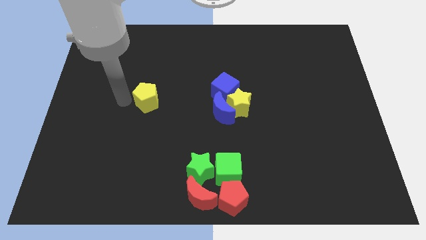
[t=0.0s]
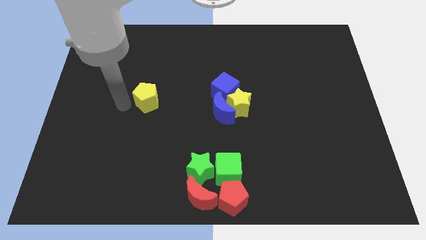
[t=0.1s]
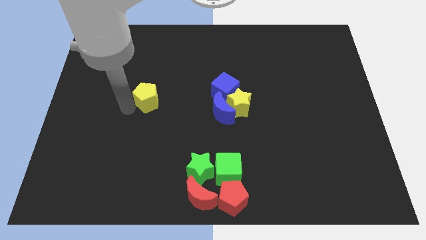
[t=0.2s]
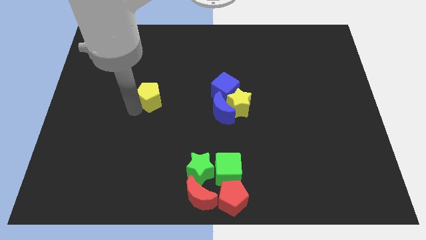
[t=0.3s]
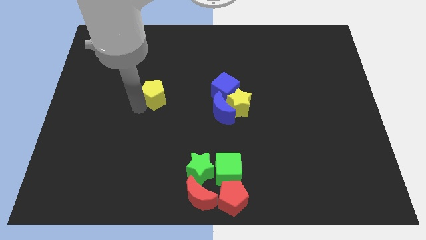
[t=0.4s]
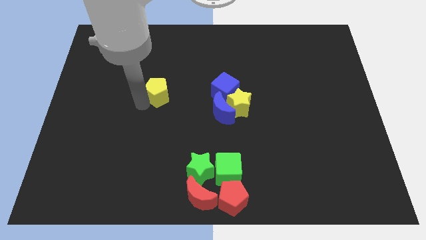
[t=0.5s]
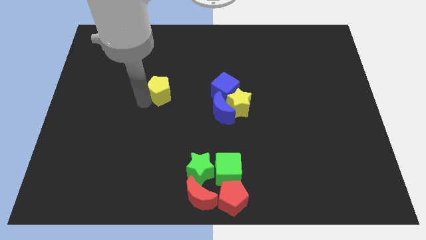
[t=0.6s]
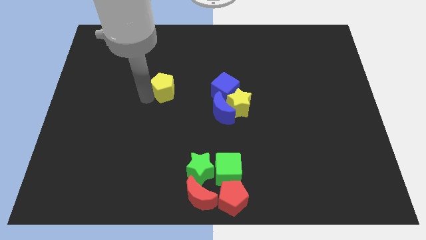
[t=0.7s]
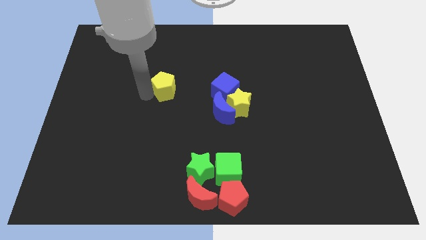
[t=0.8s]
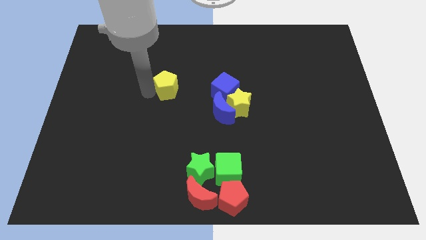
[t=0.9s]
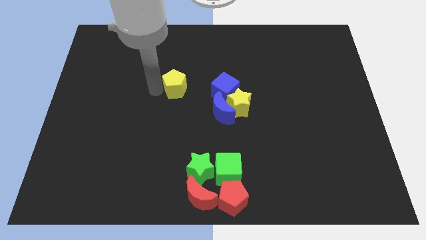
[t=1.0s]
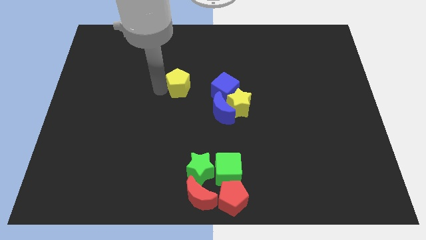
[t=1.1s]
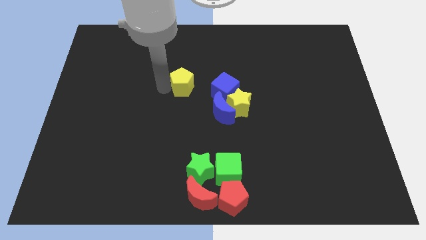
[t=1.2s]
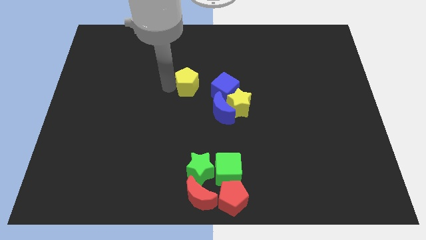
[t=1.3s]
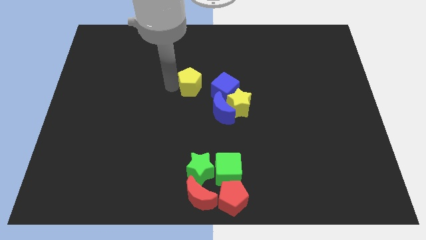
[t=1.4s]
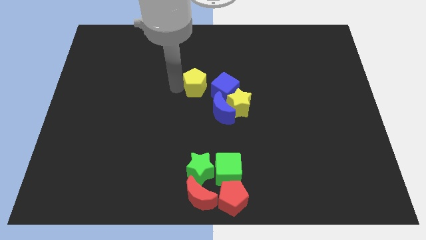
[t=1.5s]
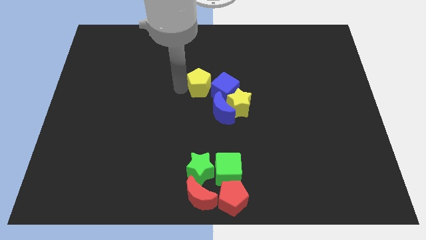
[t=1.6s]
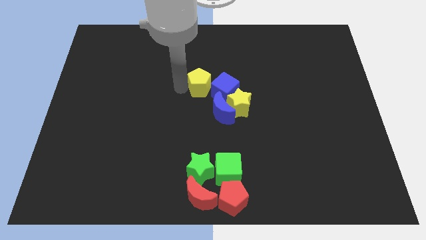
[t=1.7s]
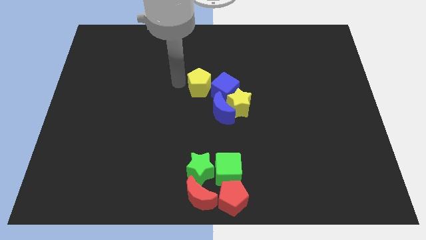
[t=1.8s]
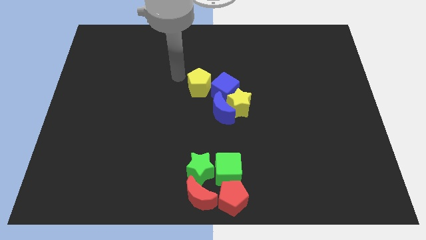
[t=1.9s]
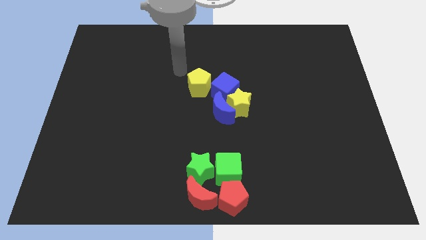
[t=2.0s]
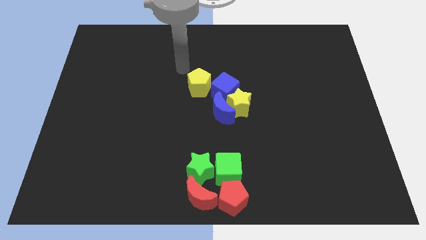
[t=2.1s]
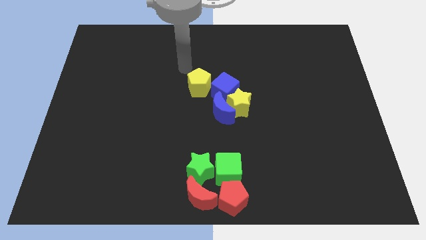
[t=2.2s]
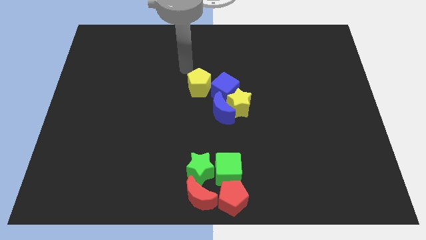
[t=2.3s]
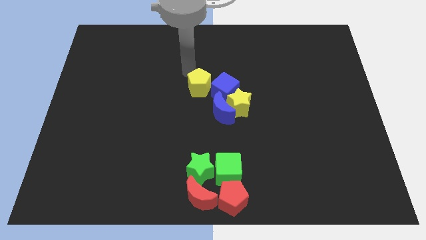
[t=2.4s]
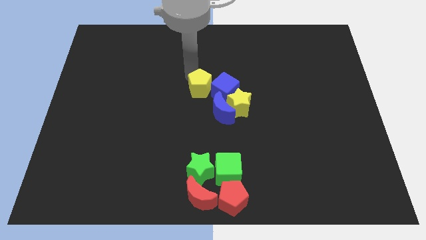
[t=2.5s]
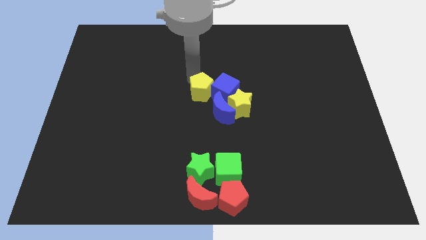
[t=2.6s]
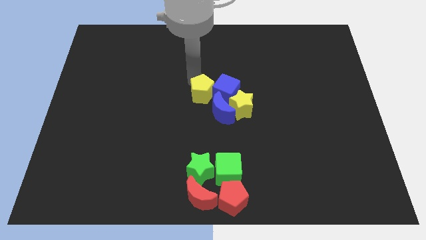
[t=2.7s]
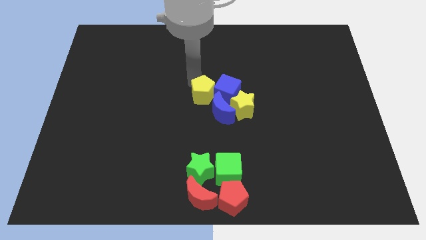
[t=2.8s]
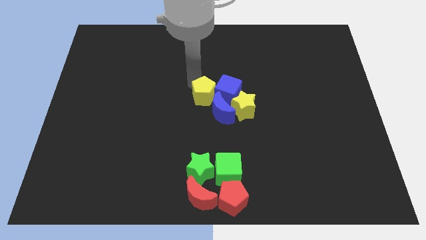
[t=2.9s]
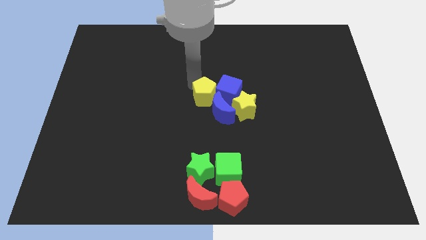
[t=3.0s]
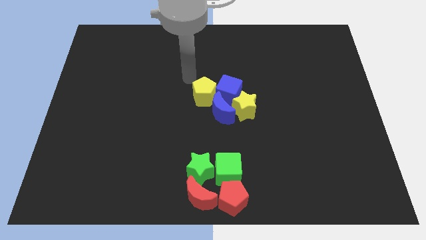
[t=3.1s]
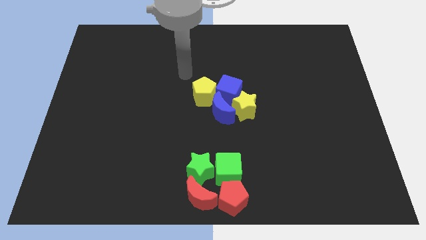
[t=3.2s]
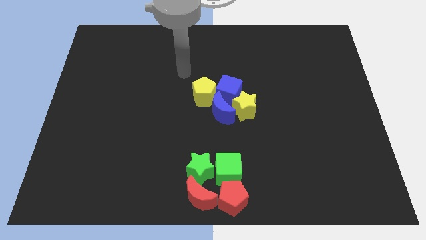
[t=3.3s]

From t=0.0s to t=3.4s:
push the yellow pentagon into the group of blocks

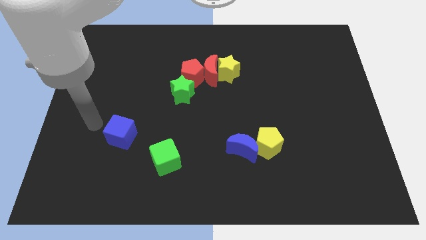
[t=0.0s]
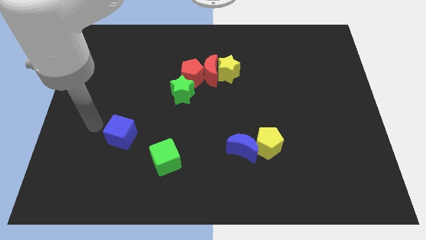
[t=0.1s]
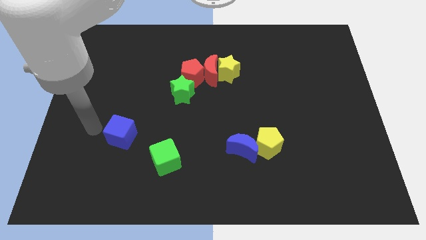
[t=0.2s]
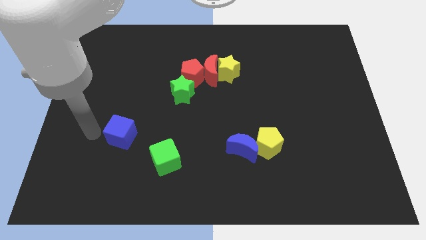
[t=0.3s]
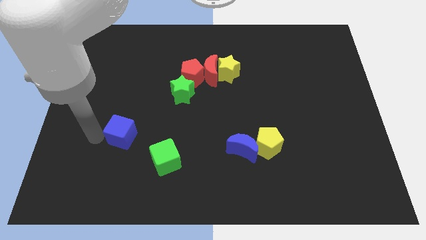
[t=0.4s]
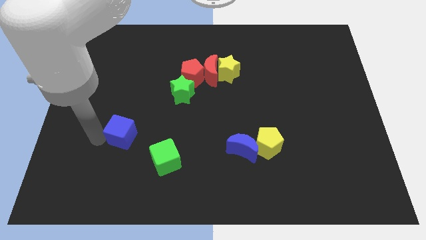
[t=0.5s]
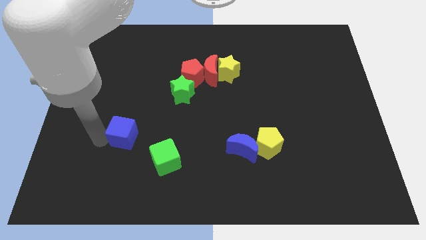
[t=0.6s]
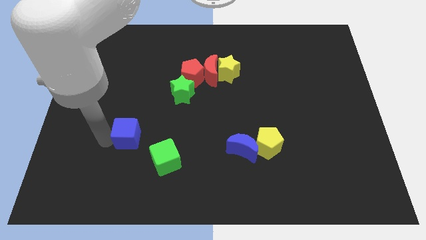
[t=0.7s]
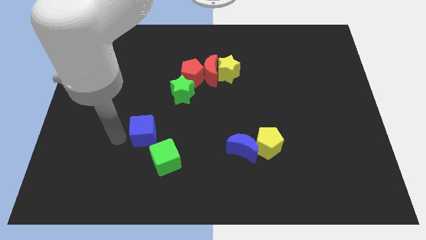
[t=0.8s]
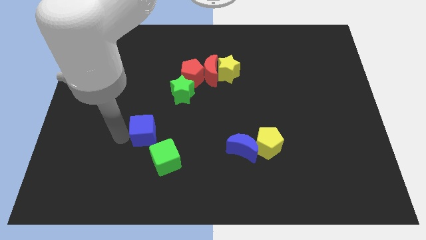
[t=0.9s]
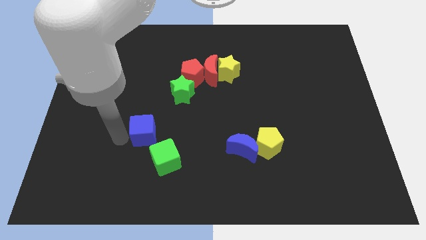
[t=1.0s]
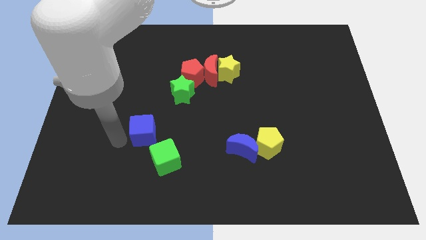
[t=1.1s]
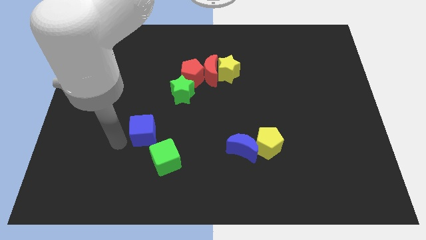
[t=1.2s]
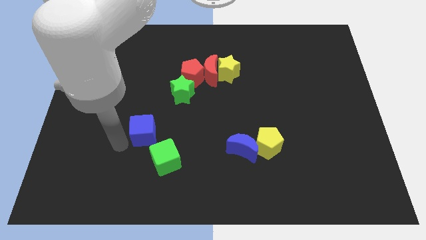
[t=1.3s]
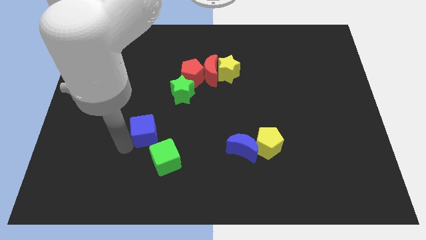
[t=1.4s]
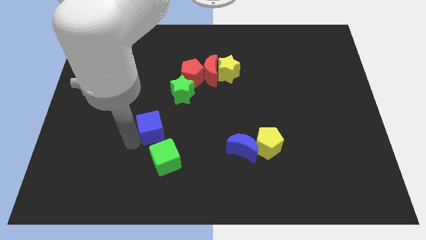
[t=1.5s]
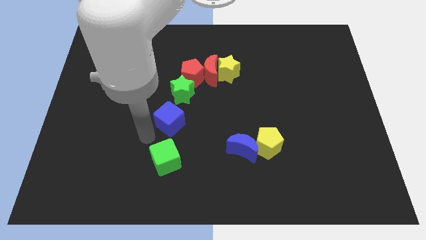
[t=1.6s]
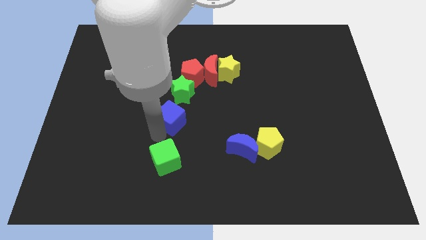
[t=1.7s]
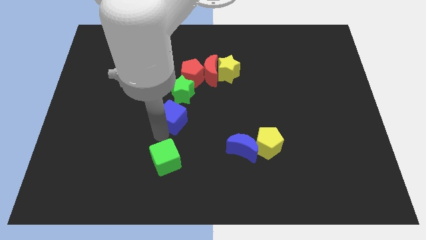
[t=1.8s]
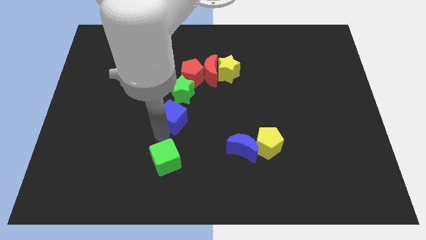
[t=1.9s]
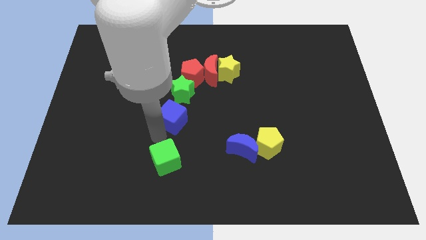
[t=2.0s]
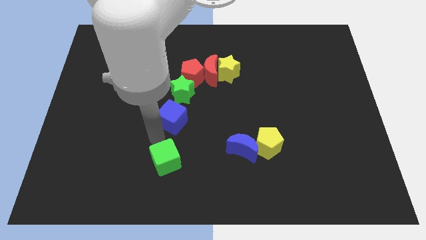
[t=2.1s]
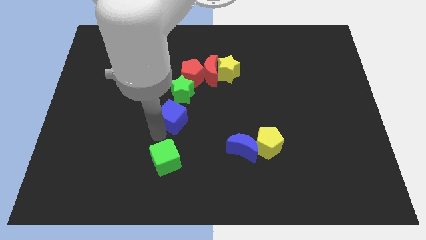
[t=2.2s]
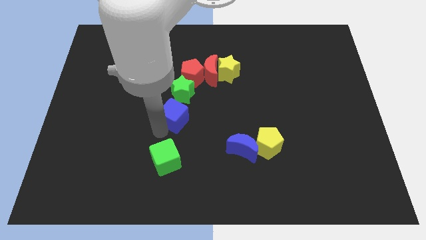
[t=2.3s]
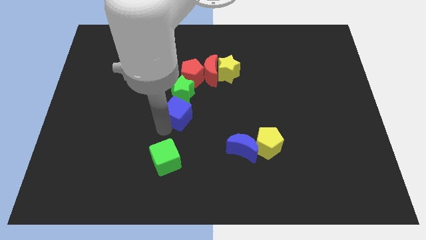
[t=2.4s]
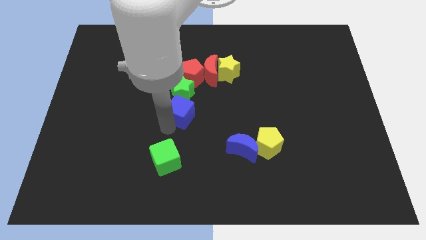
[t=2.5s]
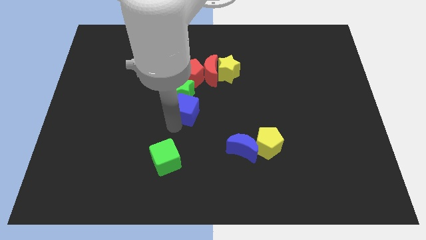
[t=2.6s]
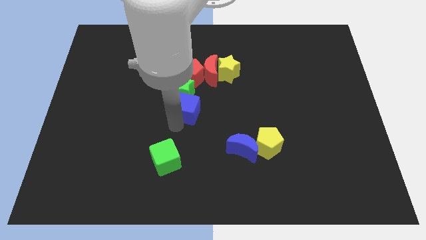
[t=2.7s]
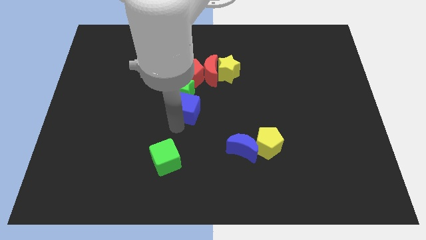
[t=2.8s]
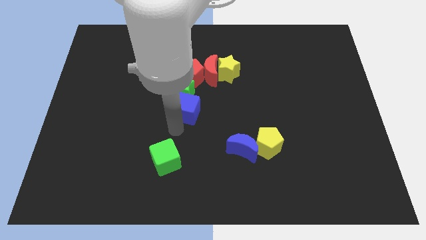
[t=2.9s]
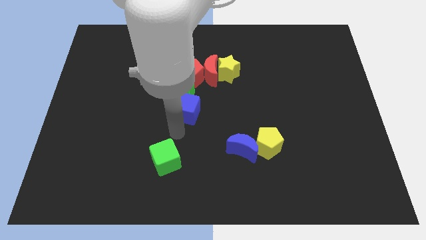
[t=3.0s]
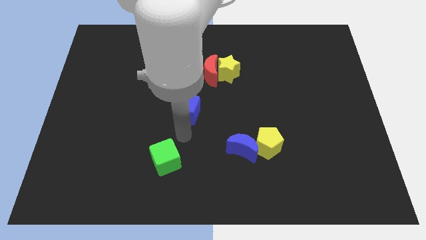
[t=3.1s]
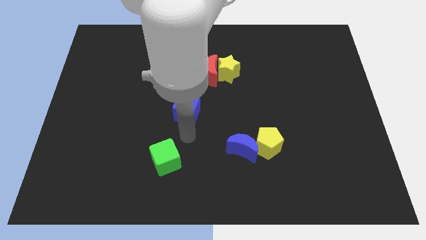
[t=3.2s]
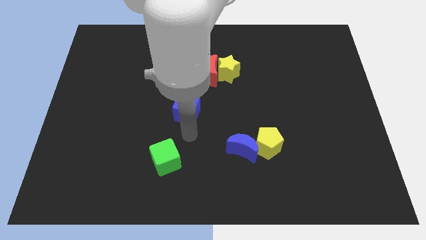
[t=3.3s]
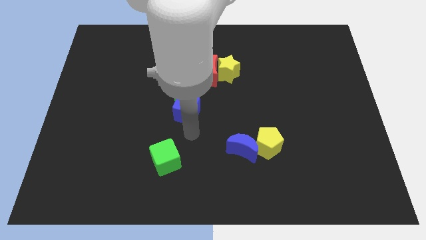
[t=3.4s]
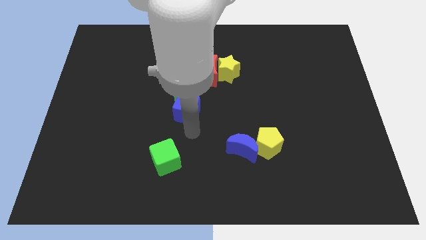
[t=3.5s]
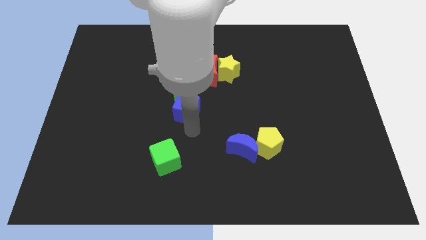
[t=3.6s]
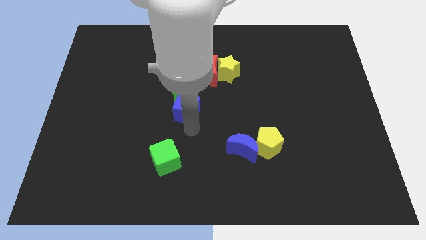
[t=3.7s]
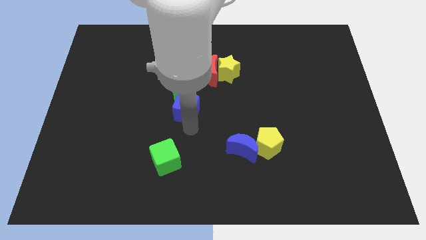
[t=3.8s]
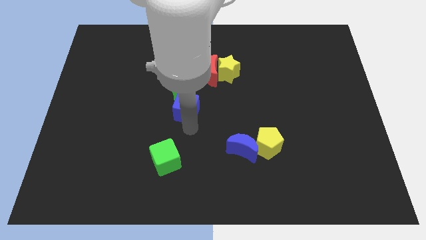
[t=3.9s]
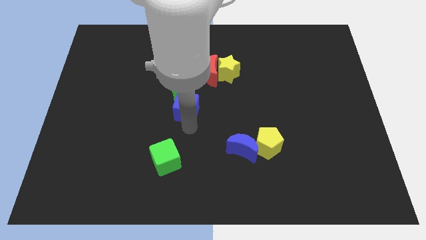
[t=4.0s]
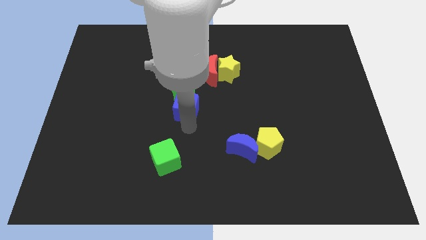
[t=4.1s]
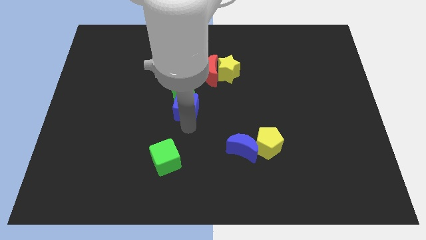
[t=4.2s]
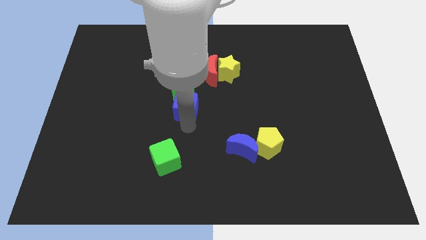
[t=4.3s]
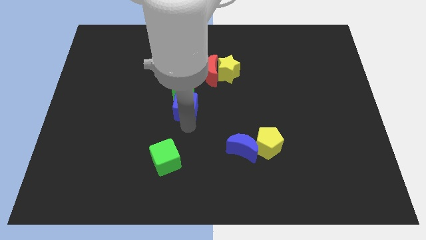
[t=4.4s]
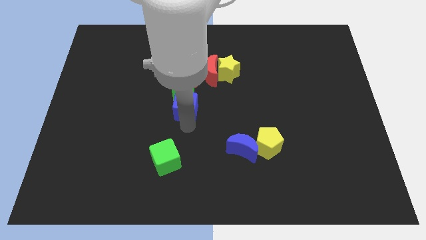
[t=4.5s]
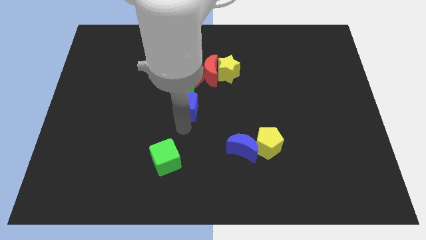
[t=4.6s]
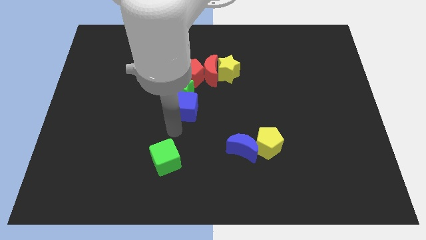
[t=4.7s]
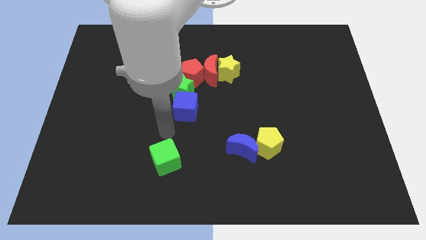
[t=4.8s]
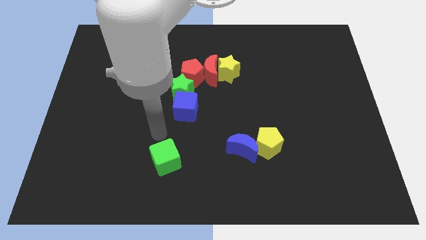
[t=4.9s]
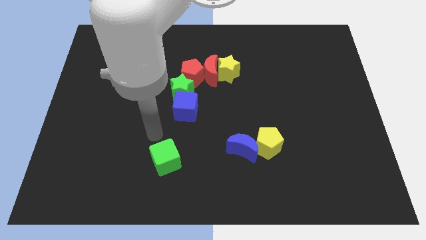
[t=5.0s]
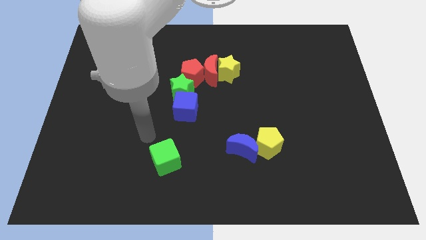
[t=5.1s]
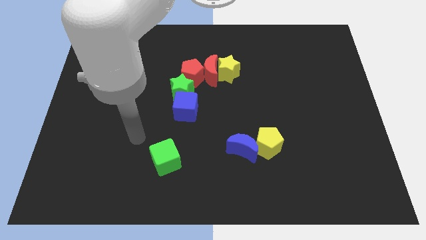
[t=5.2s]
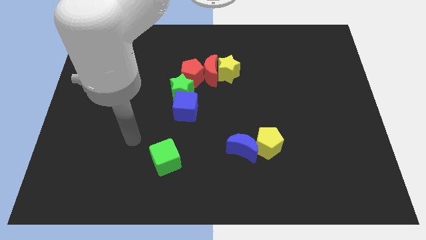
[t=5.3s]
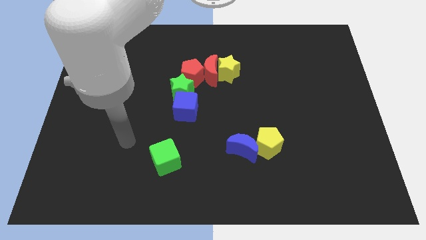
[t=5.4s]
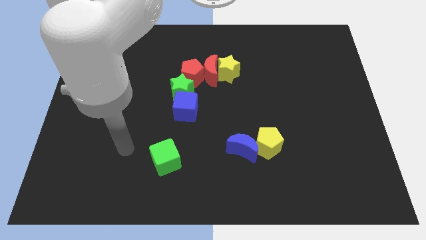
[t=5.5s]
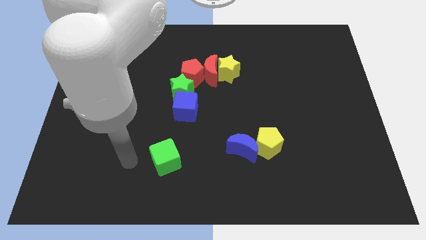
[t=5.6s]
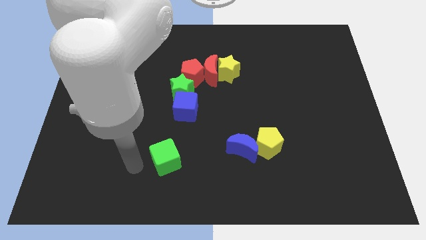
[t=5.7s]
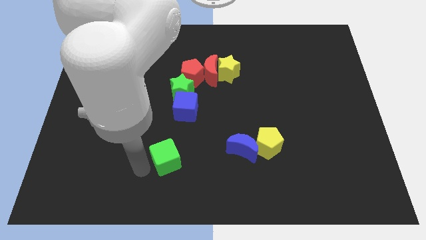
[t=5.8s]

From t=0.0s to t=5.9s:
move the blue cube to the group of blocks
